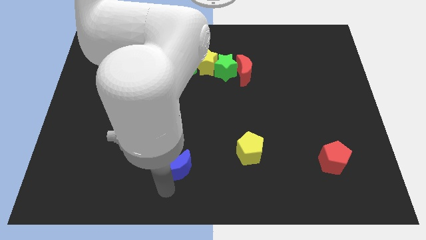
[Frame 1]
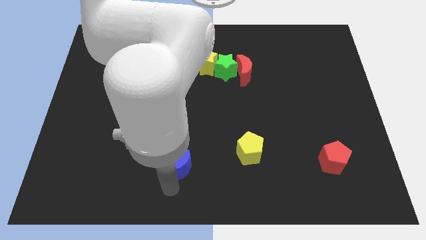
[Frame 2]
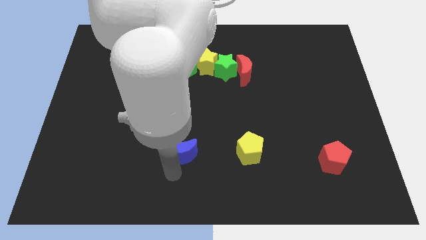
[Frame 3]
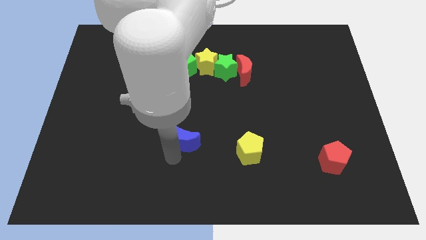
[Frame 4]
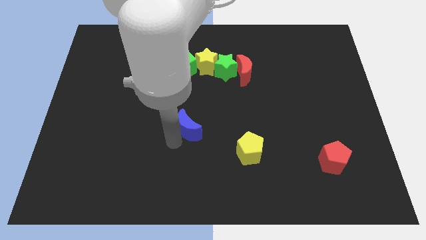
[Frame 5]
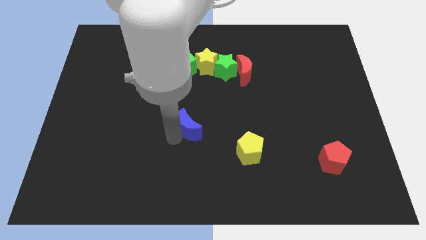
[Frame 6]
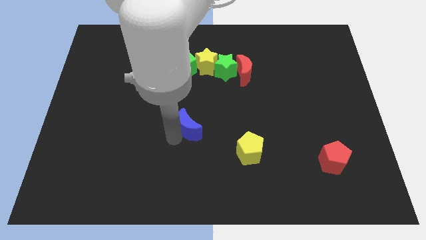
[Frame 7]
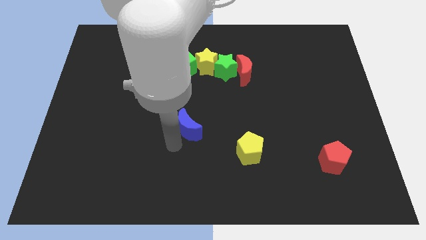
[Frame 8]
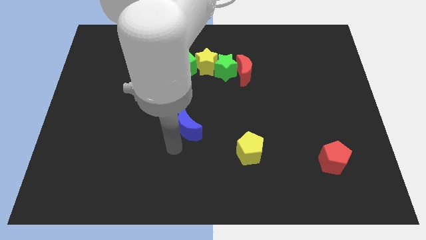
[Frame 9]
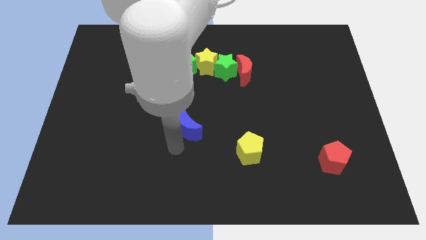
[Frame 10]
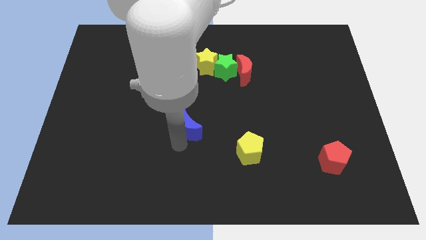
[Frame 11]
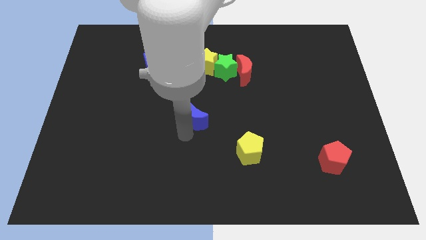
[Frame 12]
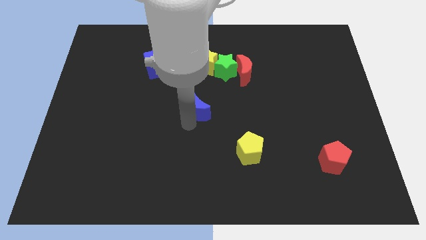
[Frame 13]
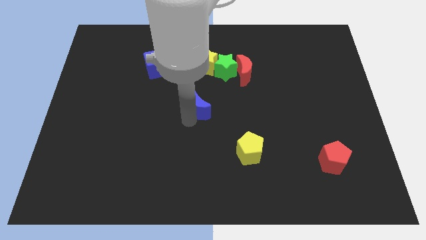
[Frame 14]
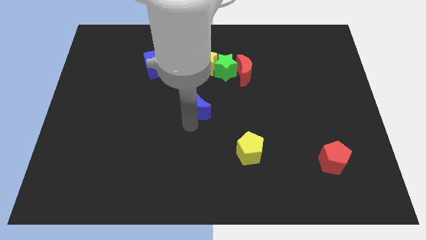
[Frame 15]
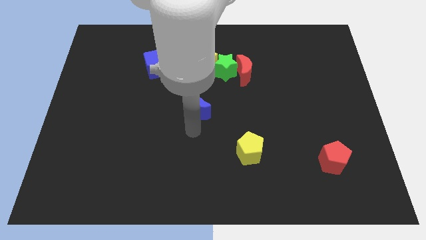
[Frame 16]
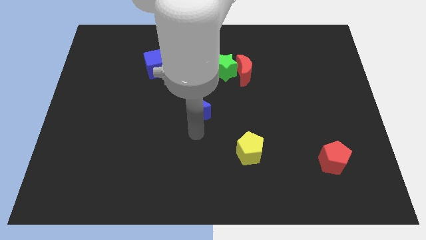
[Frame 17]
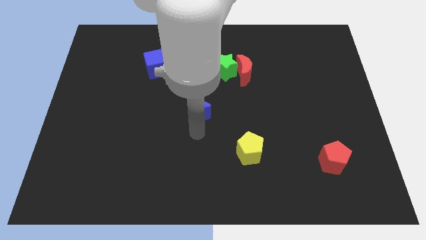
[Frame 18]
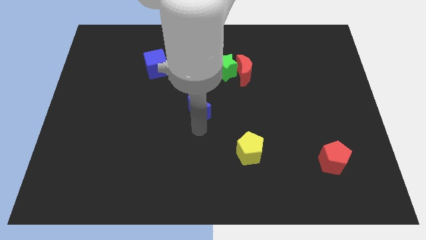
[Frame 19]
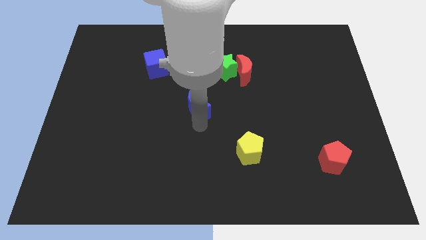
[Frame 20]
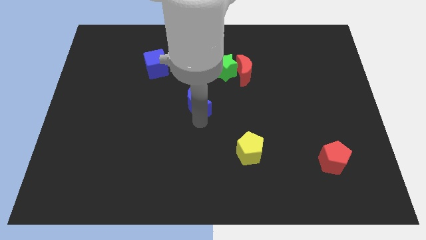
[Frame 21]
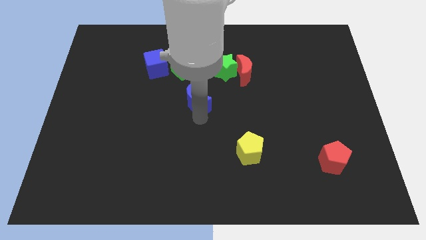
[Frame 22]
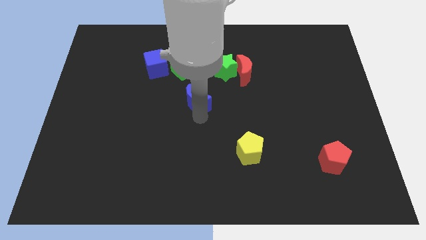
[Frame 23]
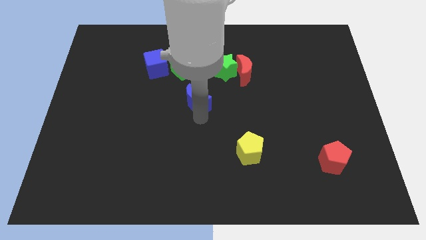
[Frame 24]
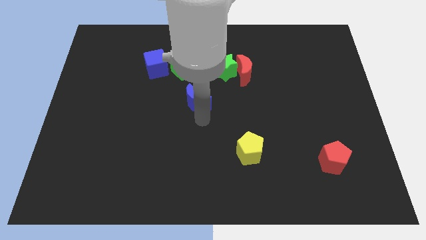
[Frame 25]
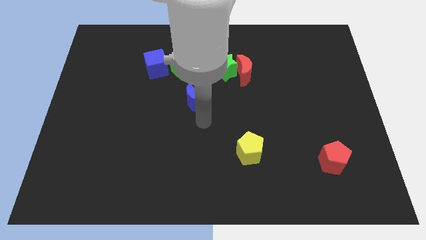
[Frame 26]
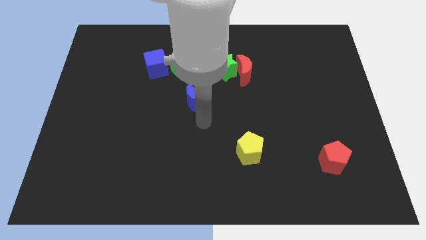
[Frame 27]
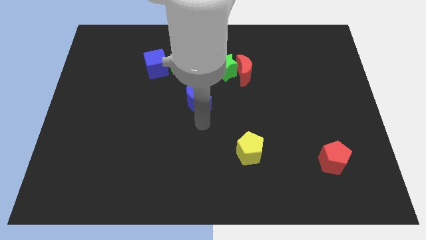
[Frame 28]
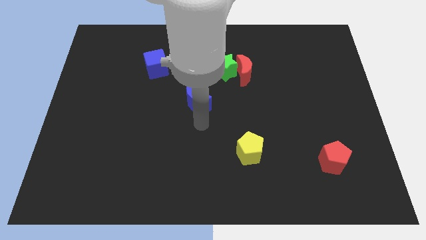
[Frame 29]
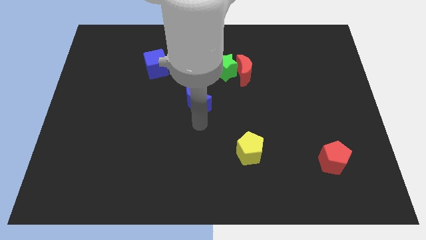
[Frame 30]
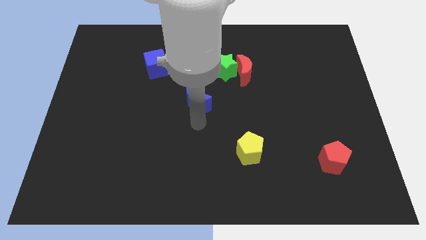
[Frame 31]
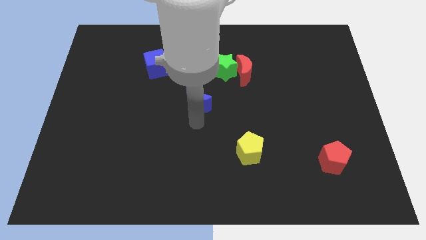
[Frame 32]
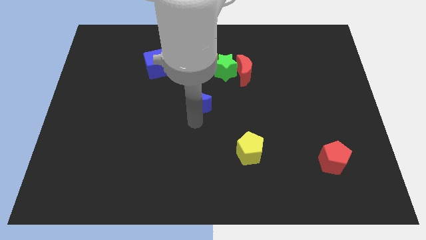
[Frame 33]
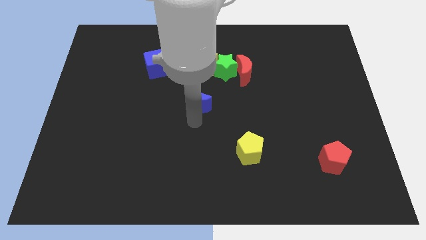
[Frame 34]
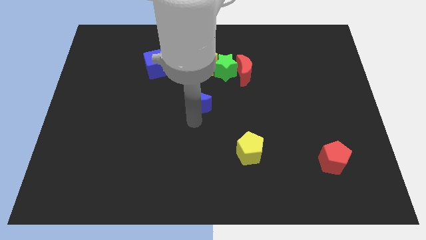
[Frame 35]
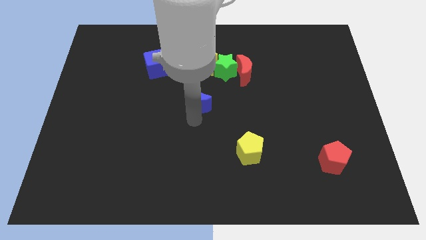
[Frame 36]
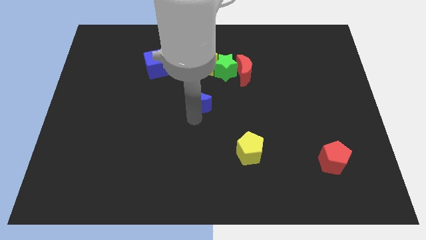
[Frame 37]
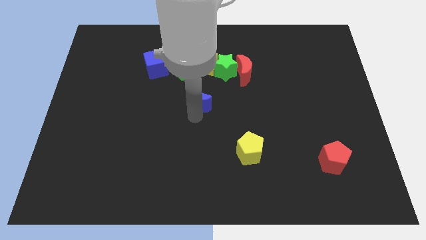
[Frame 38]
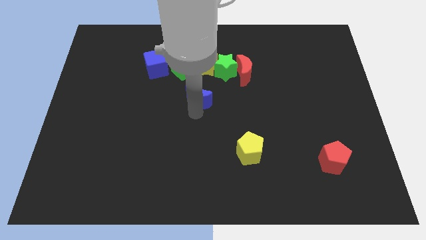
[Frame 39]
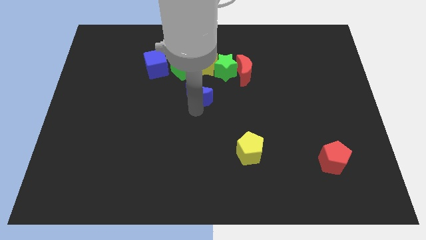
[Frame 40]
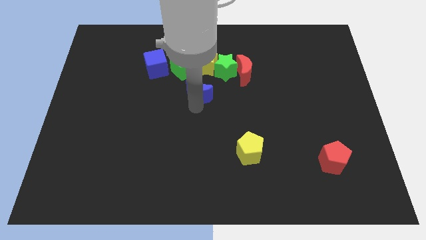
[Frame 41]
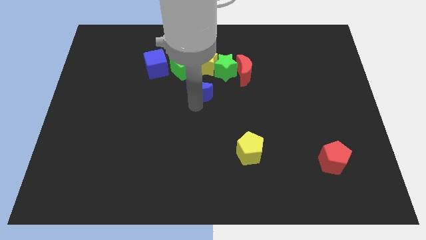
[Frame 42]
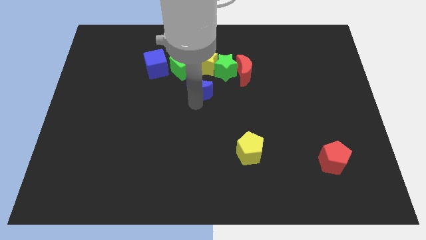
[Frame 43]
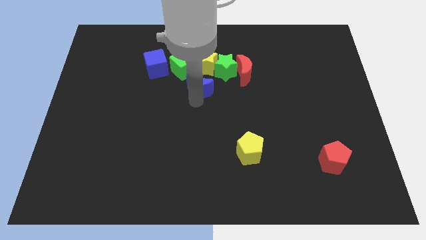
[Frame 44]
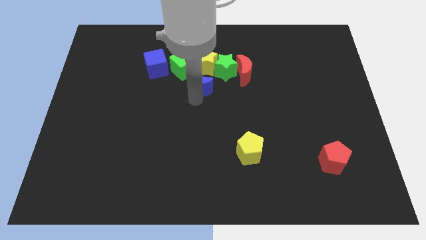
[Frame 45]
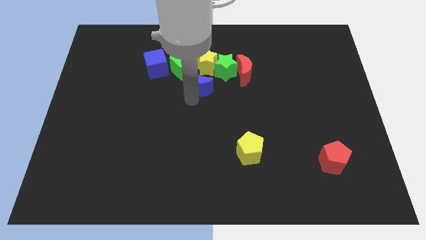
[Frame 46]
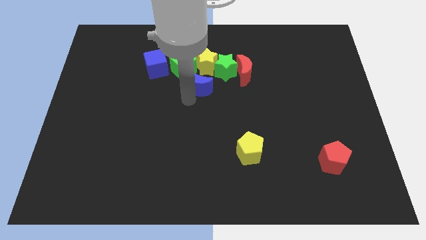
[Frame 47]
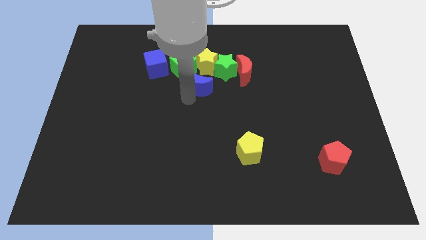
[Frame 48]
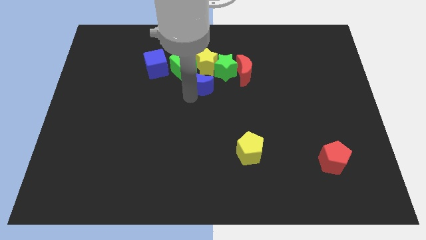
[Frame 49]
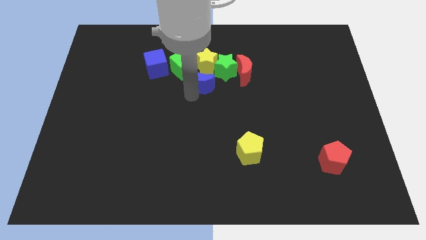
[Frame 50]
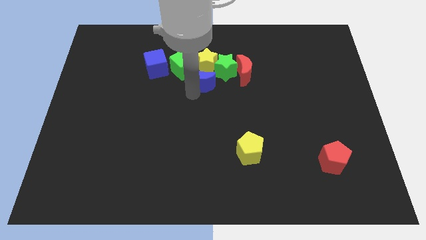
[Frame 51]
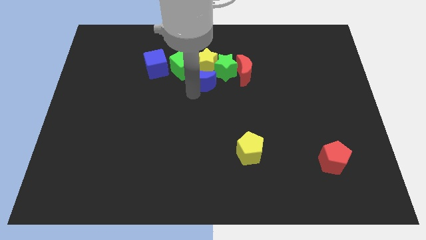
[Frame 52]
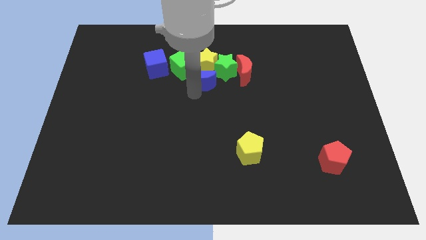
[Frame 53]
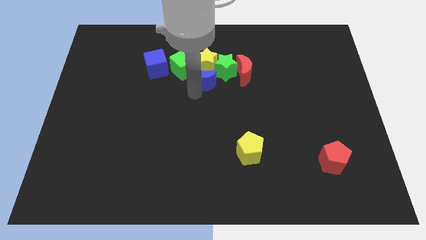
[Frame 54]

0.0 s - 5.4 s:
move the blue crescent below the yellow star

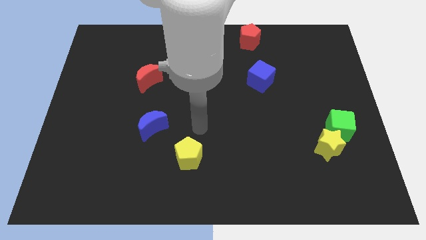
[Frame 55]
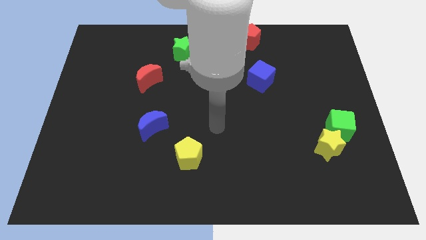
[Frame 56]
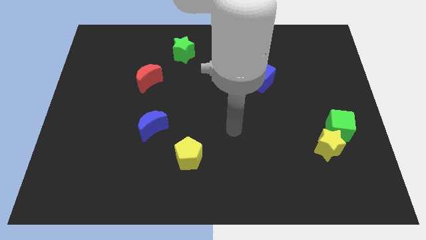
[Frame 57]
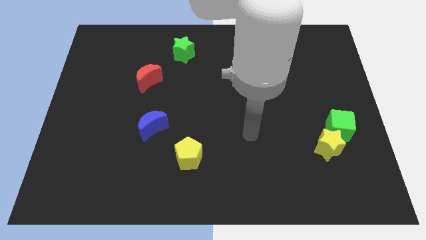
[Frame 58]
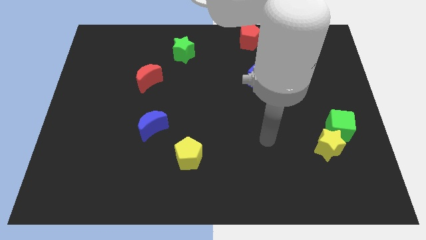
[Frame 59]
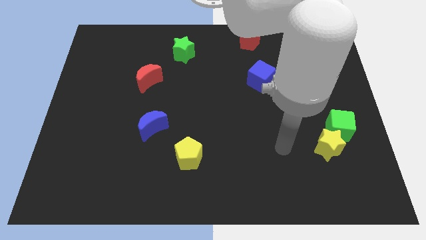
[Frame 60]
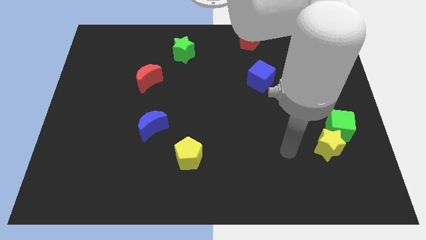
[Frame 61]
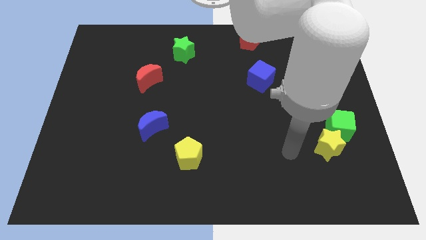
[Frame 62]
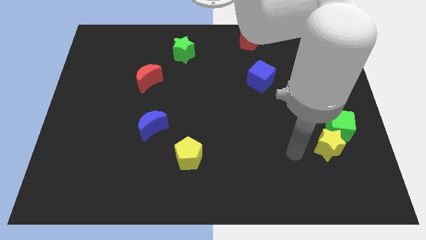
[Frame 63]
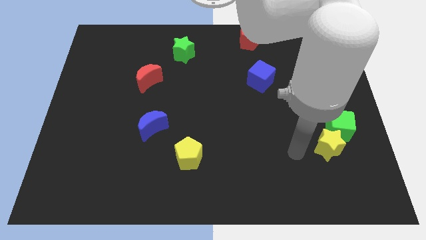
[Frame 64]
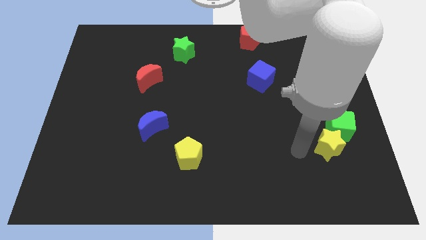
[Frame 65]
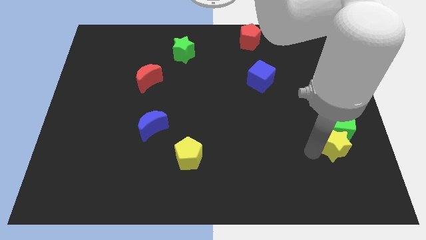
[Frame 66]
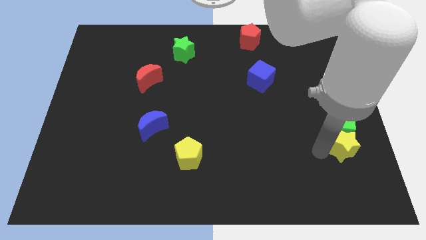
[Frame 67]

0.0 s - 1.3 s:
place the arm left to the yellow star

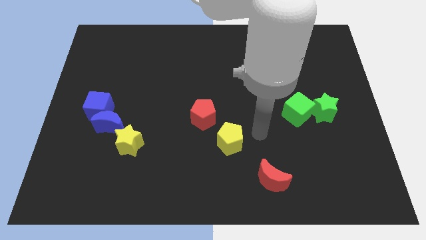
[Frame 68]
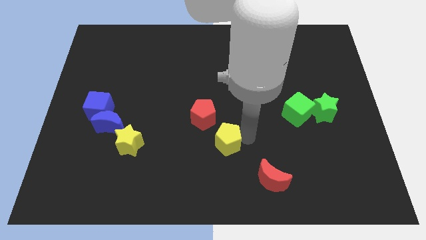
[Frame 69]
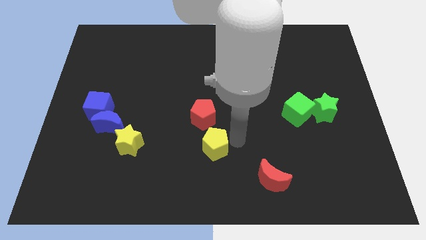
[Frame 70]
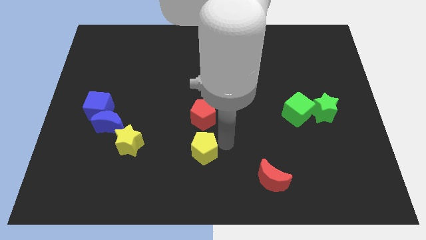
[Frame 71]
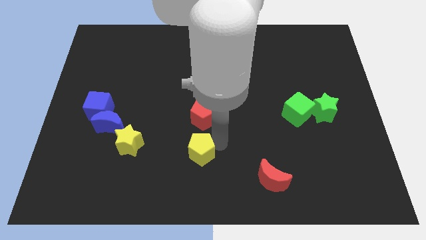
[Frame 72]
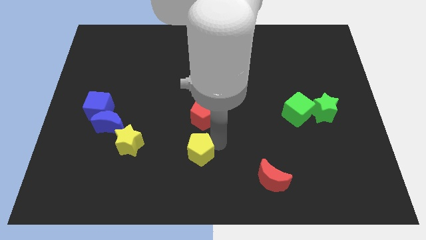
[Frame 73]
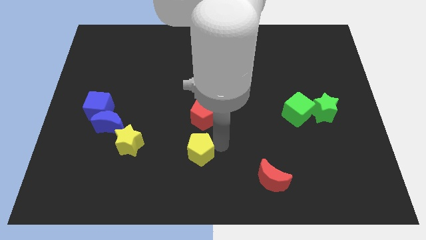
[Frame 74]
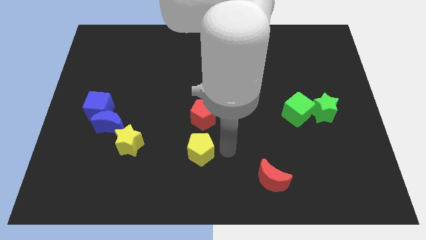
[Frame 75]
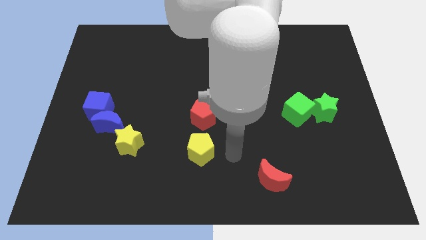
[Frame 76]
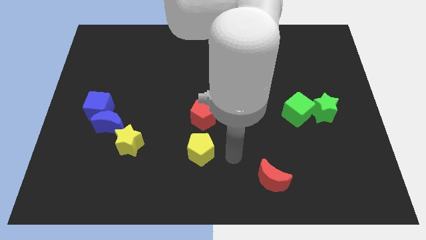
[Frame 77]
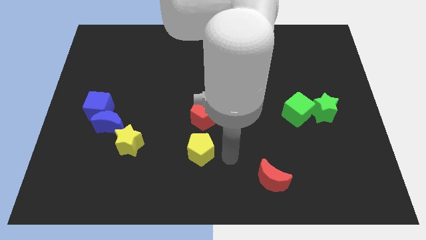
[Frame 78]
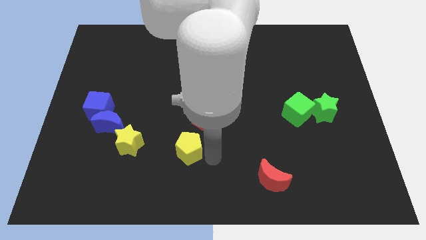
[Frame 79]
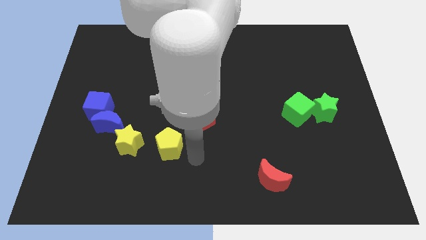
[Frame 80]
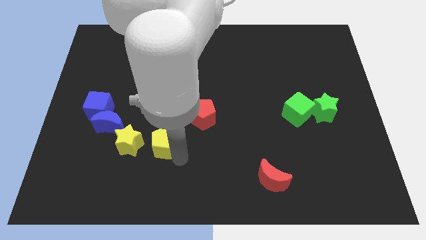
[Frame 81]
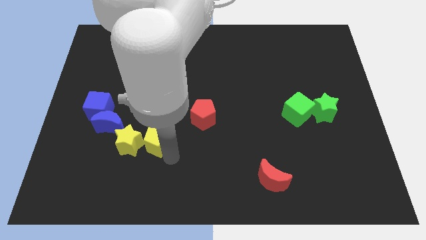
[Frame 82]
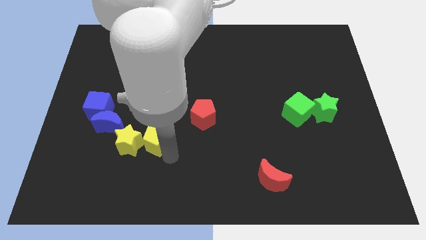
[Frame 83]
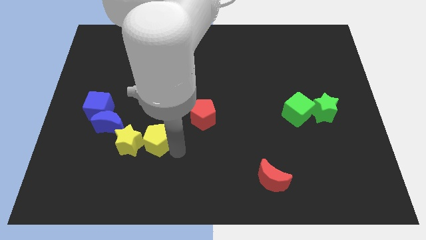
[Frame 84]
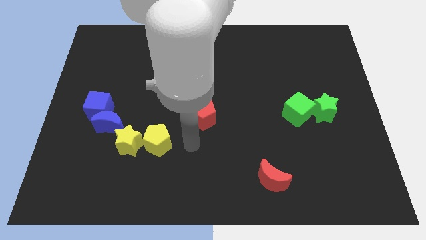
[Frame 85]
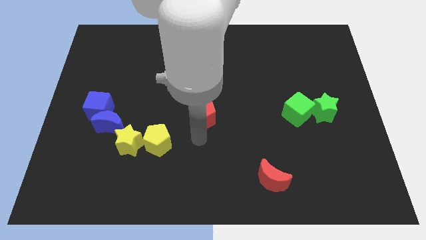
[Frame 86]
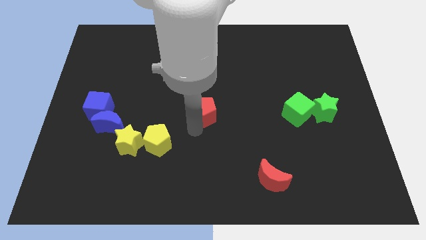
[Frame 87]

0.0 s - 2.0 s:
place the yellow pentagon right beside the yellow star

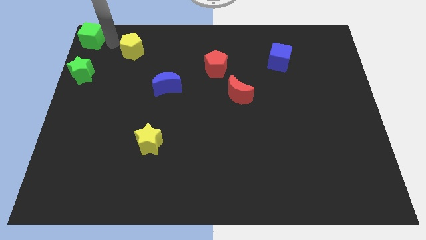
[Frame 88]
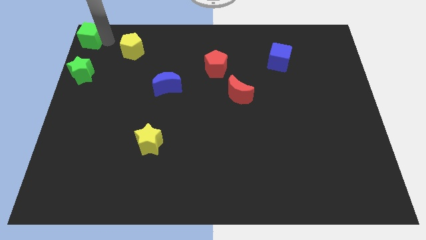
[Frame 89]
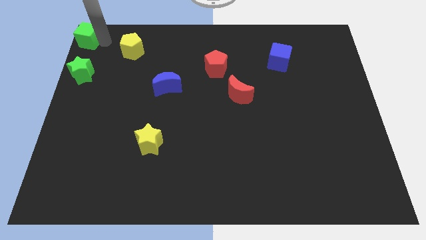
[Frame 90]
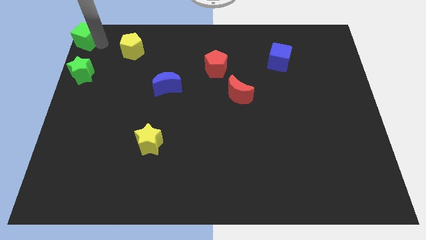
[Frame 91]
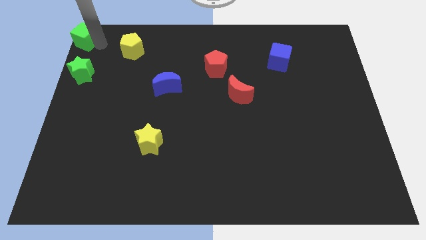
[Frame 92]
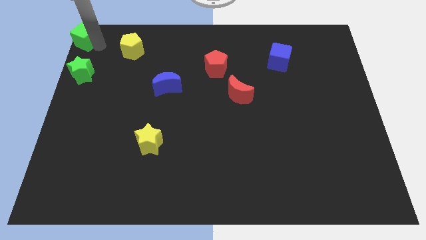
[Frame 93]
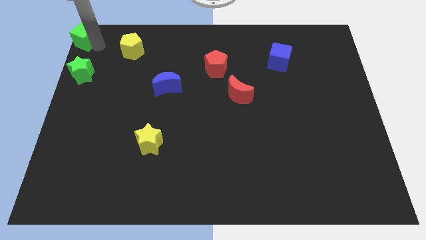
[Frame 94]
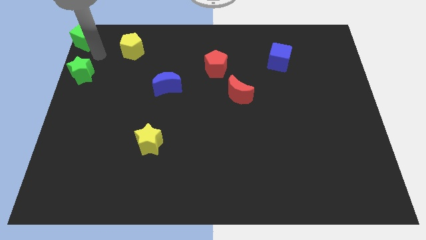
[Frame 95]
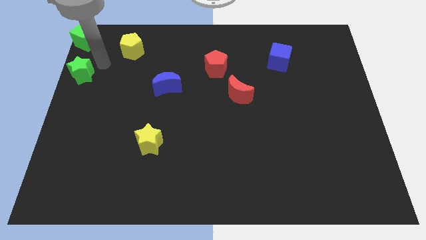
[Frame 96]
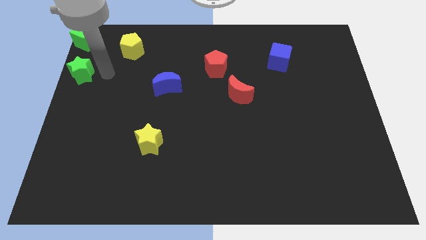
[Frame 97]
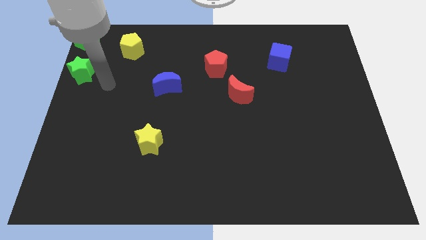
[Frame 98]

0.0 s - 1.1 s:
move green cube to the top left corner of the board
